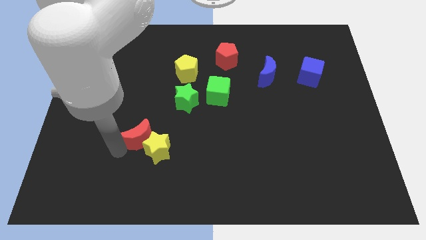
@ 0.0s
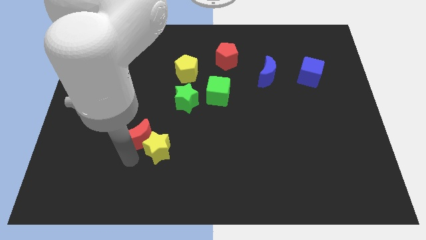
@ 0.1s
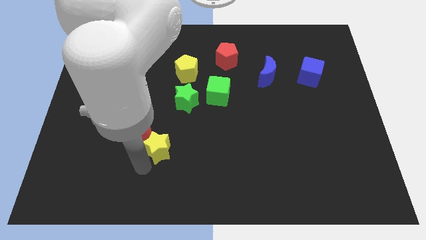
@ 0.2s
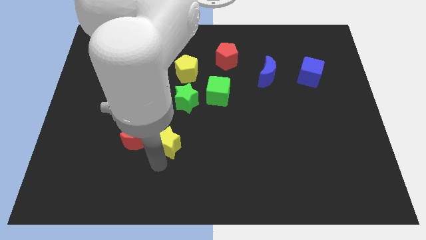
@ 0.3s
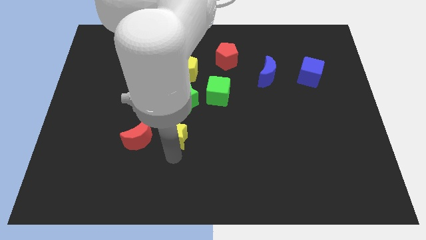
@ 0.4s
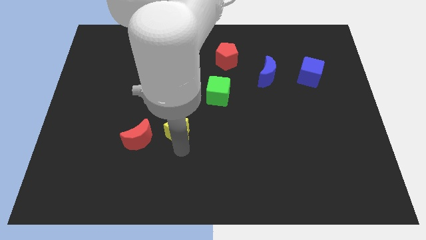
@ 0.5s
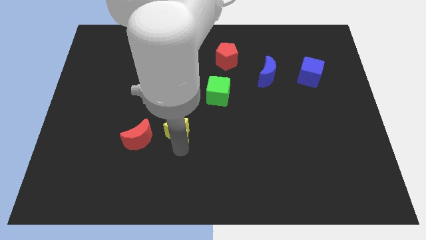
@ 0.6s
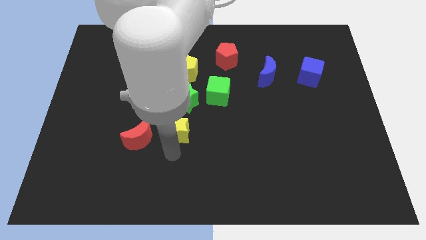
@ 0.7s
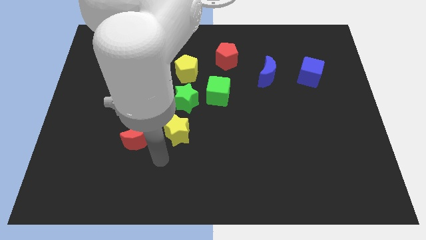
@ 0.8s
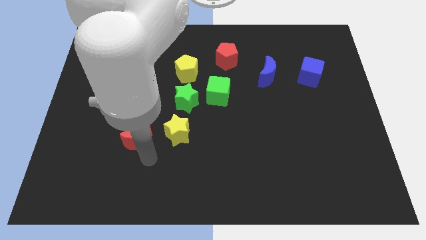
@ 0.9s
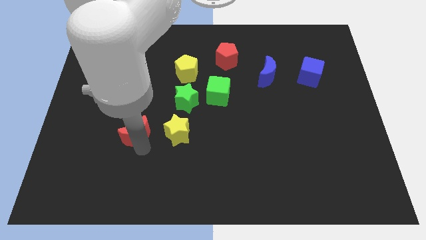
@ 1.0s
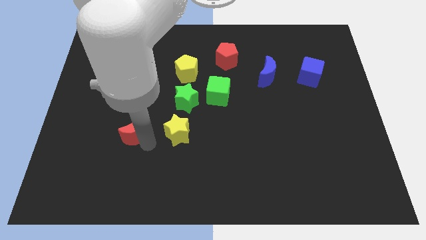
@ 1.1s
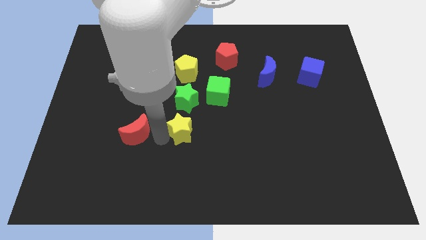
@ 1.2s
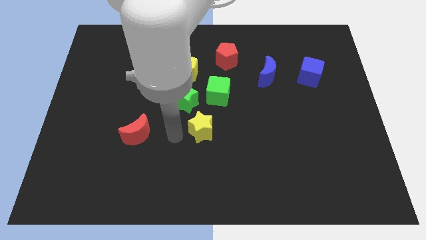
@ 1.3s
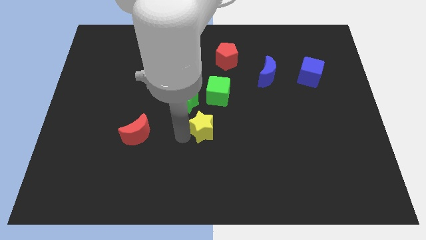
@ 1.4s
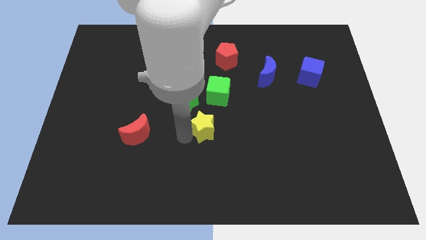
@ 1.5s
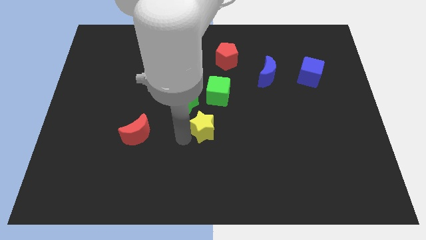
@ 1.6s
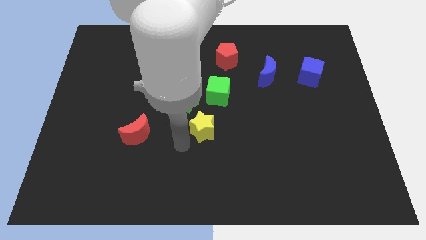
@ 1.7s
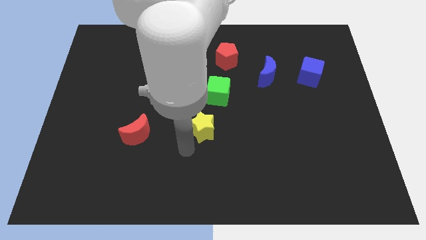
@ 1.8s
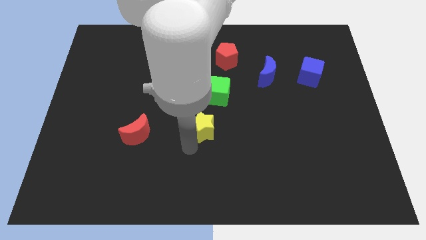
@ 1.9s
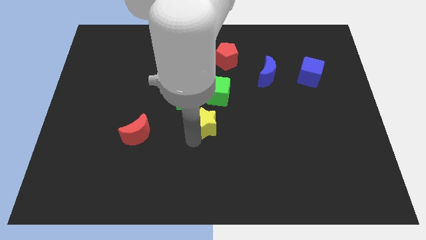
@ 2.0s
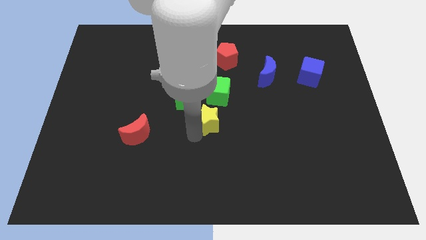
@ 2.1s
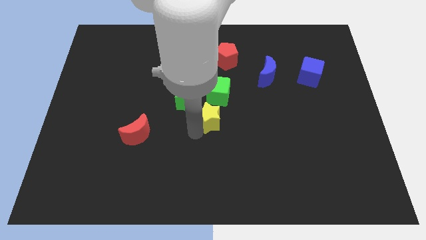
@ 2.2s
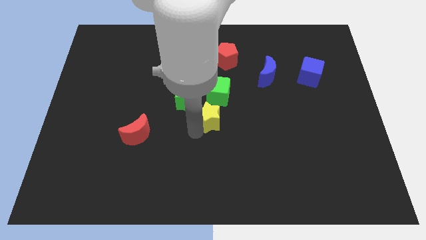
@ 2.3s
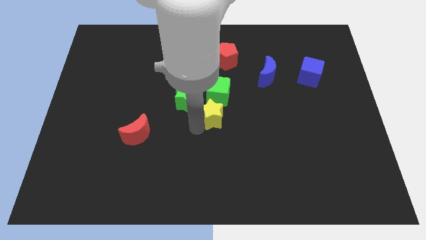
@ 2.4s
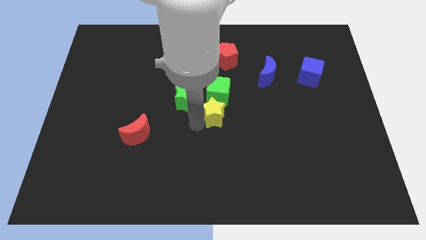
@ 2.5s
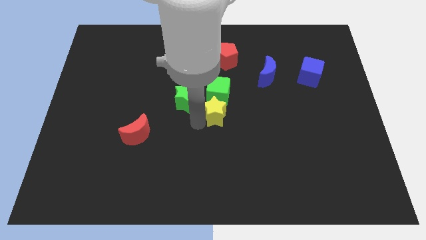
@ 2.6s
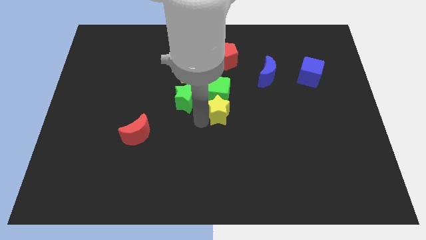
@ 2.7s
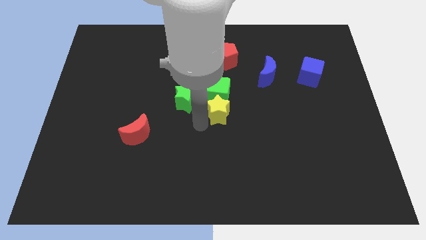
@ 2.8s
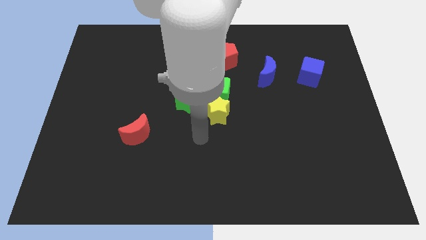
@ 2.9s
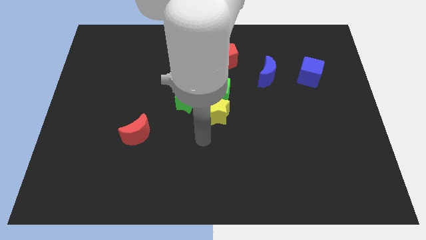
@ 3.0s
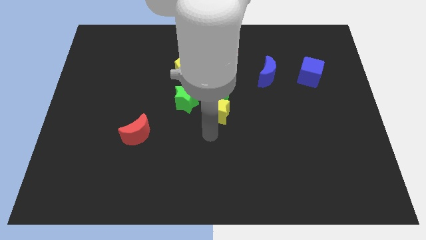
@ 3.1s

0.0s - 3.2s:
move the yellow star to the bottom of the green cube

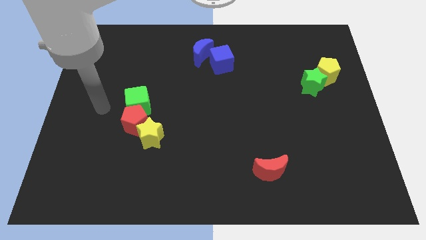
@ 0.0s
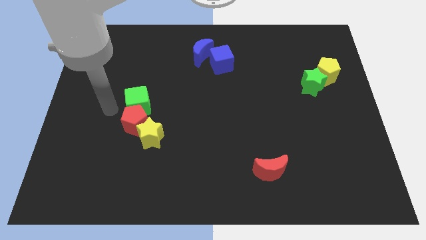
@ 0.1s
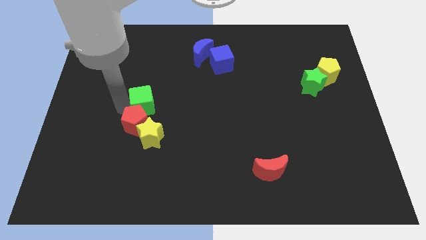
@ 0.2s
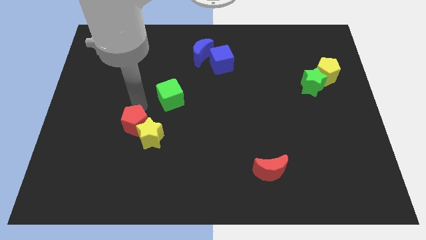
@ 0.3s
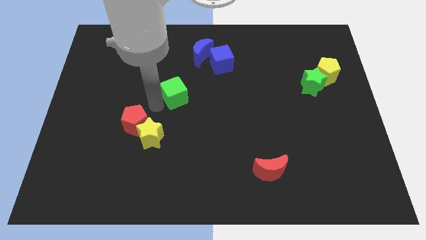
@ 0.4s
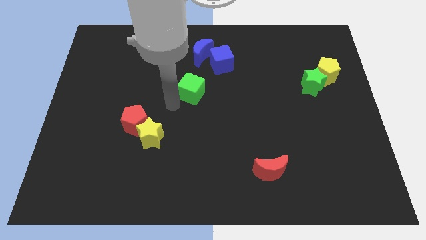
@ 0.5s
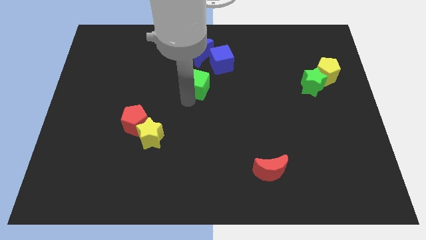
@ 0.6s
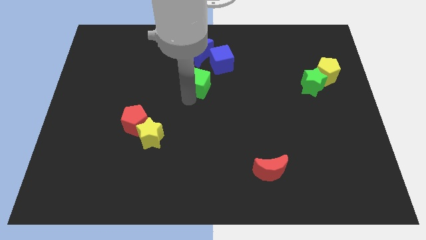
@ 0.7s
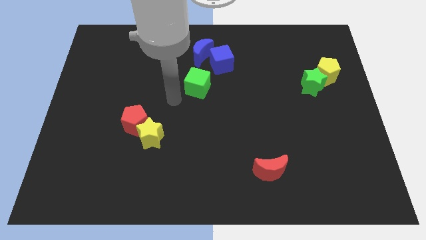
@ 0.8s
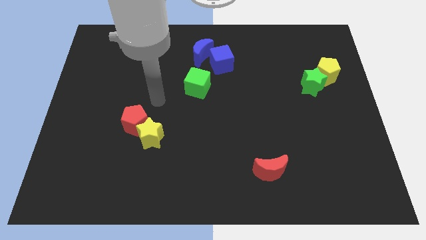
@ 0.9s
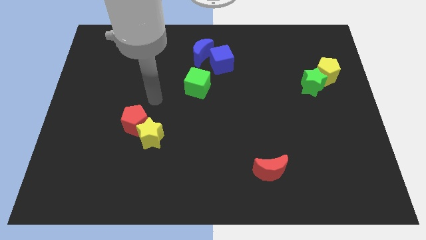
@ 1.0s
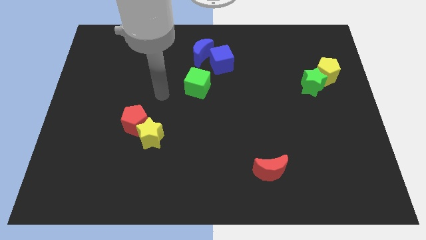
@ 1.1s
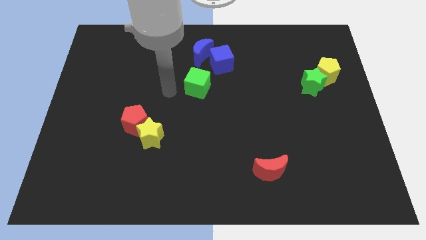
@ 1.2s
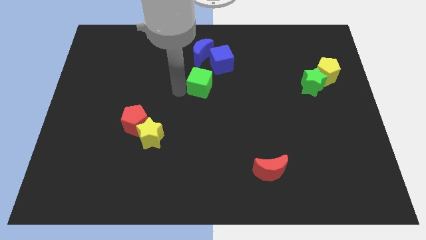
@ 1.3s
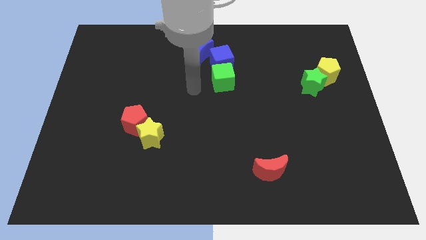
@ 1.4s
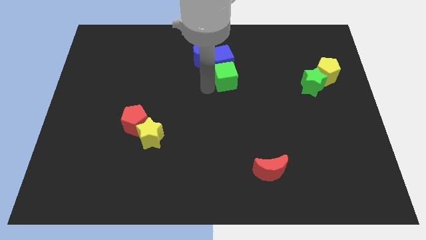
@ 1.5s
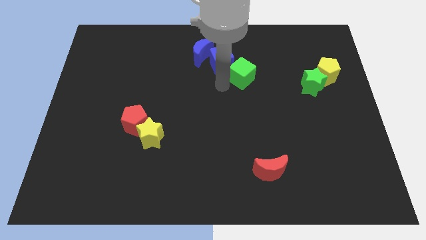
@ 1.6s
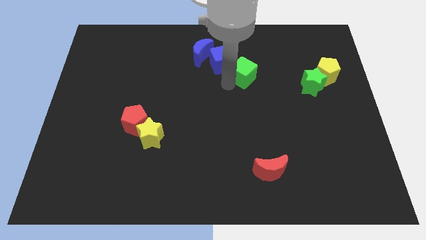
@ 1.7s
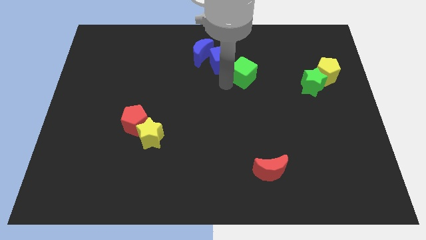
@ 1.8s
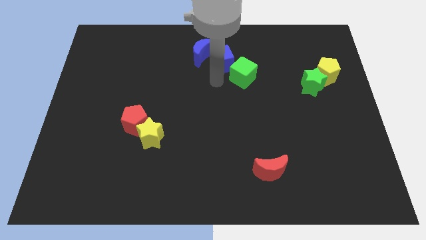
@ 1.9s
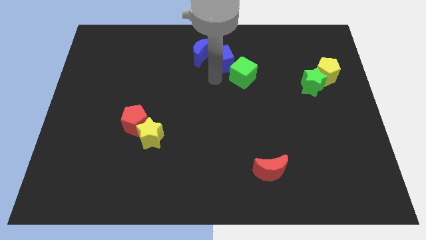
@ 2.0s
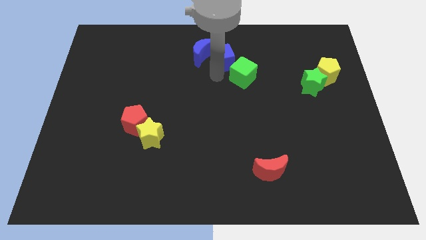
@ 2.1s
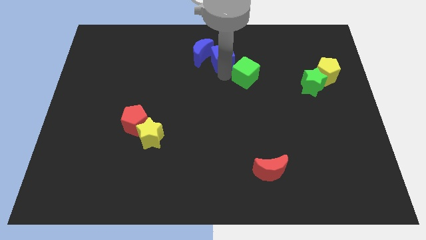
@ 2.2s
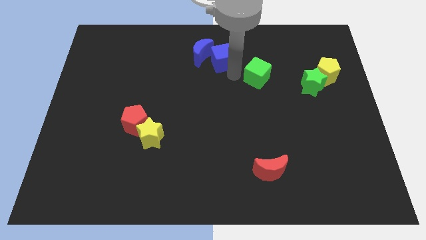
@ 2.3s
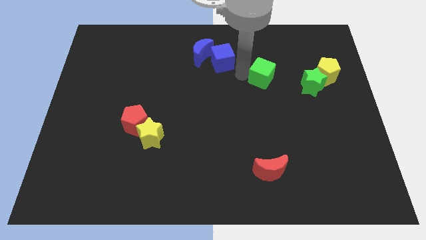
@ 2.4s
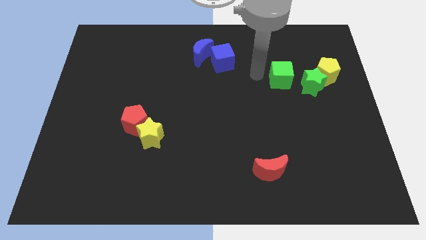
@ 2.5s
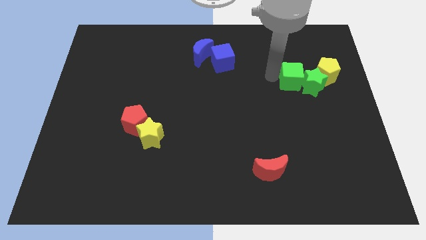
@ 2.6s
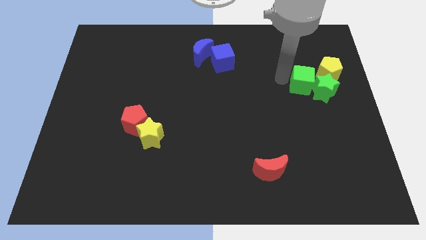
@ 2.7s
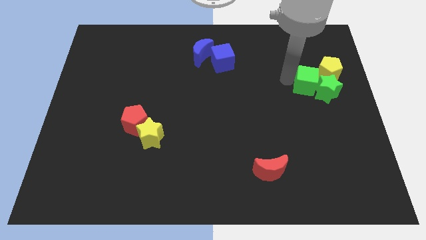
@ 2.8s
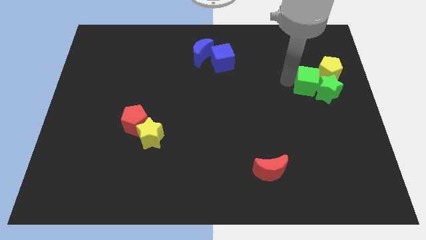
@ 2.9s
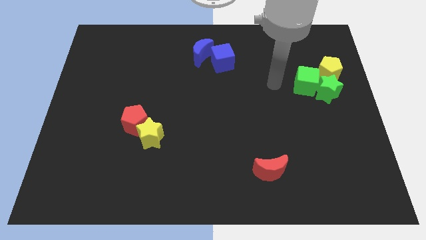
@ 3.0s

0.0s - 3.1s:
push the green cube into the green star

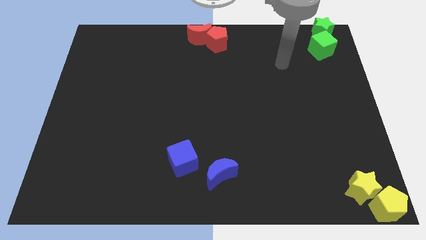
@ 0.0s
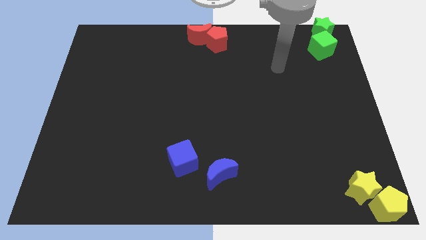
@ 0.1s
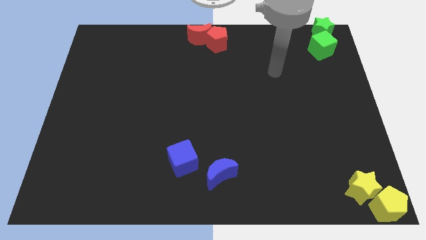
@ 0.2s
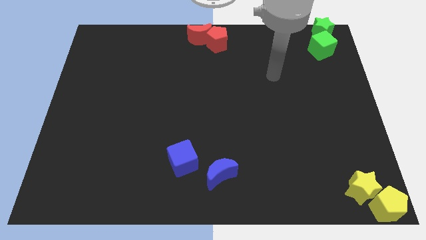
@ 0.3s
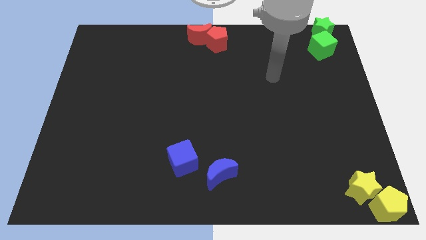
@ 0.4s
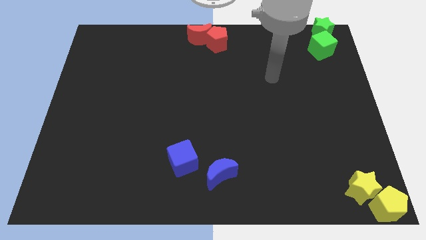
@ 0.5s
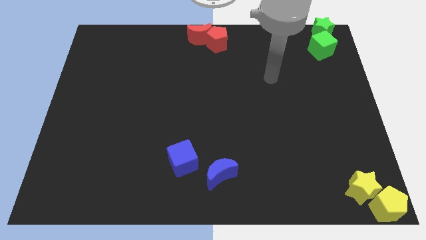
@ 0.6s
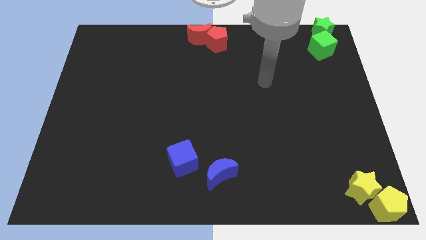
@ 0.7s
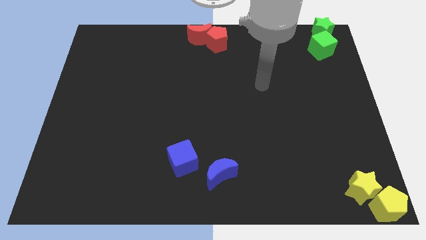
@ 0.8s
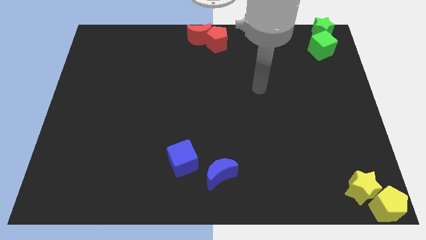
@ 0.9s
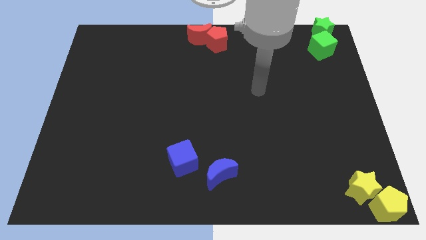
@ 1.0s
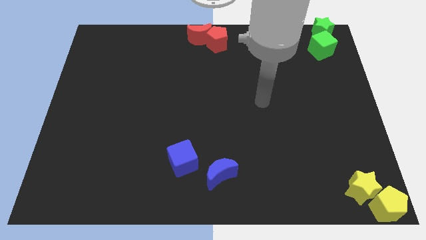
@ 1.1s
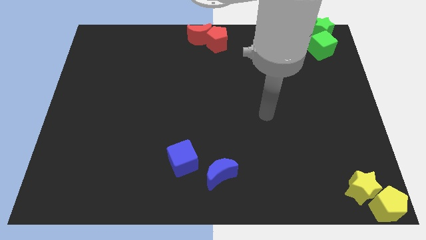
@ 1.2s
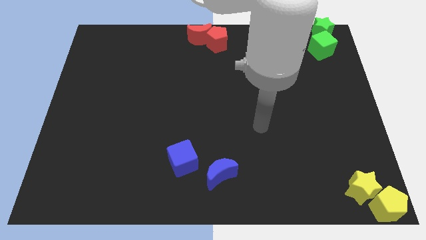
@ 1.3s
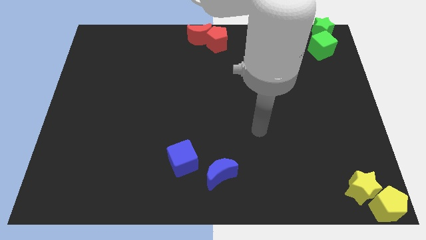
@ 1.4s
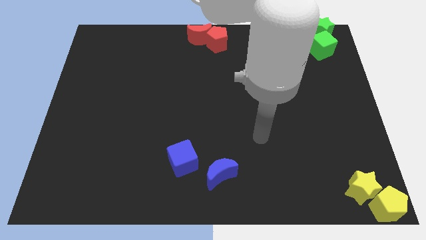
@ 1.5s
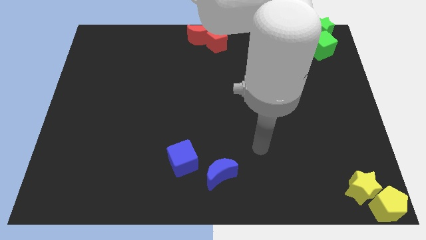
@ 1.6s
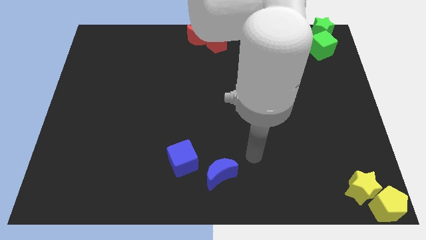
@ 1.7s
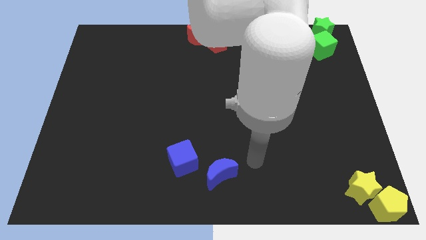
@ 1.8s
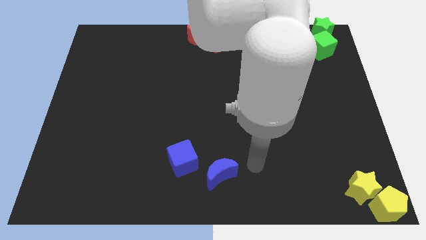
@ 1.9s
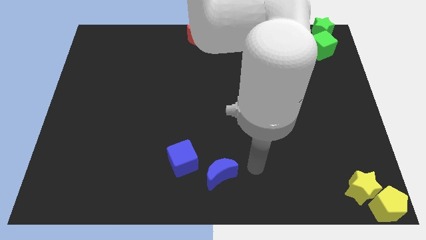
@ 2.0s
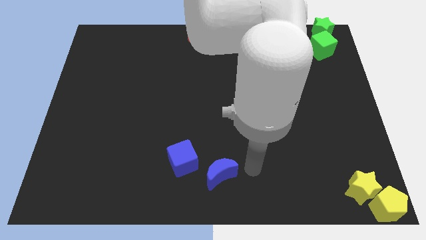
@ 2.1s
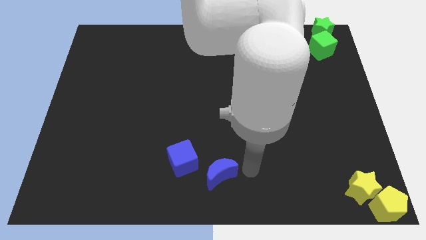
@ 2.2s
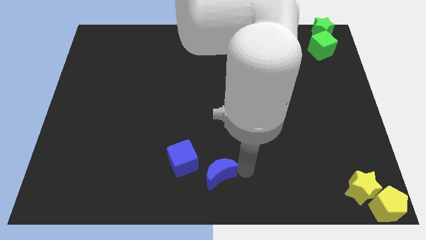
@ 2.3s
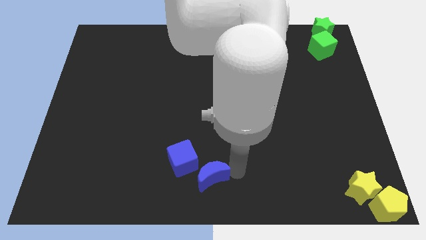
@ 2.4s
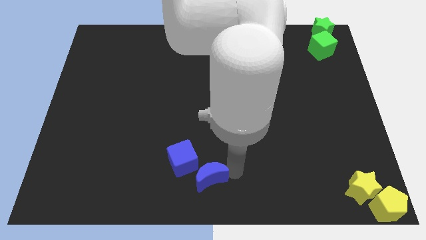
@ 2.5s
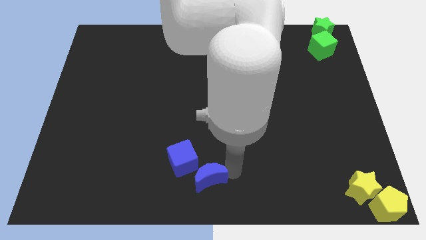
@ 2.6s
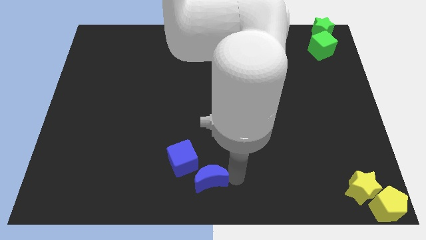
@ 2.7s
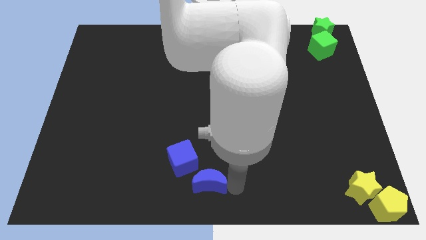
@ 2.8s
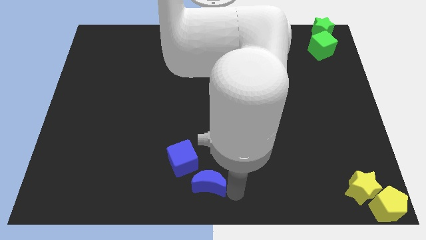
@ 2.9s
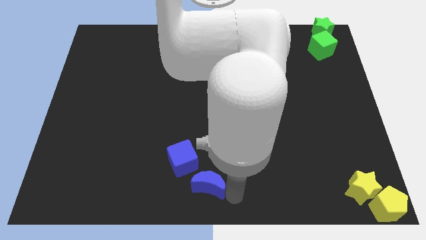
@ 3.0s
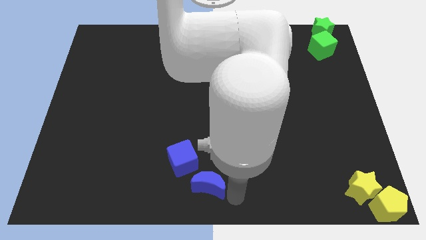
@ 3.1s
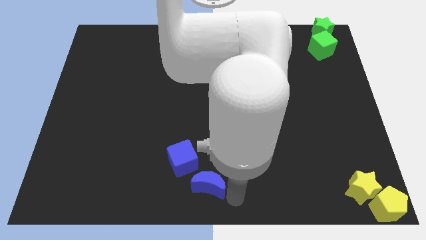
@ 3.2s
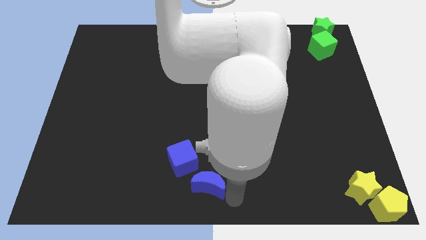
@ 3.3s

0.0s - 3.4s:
move your arm to the bottom of the blue crescent
